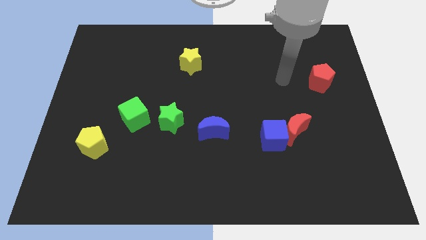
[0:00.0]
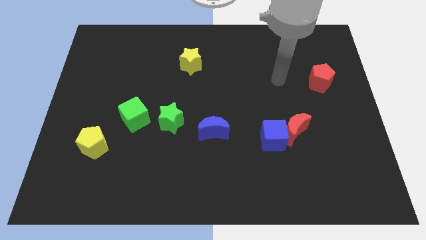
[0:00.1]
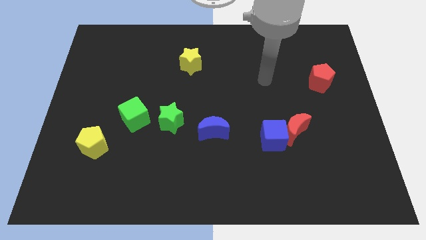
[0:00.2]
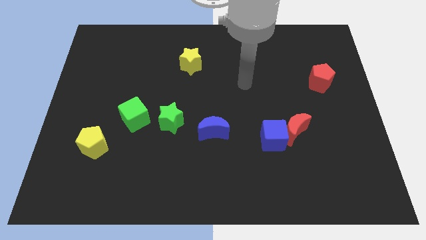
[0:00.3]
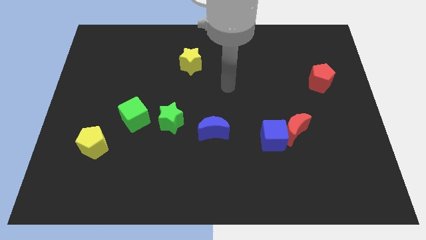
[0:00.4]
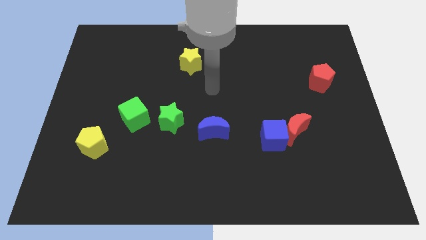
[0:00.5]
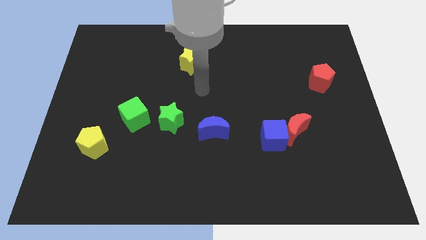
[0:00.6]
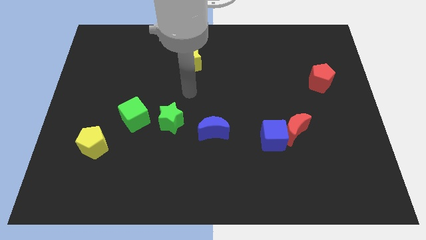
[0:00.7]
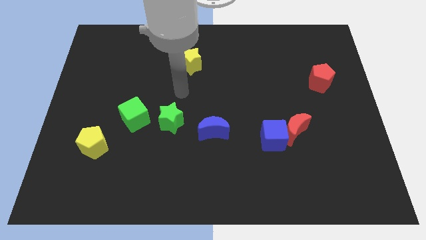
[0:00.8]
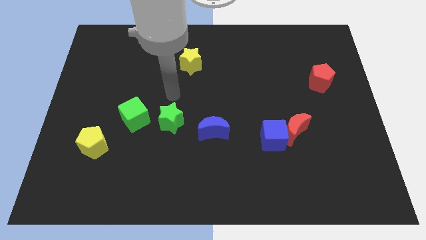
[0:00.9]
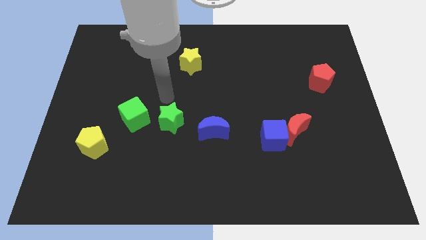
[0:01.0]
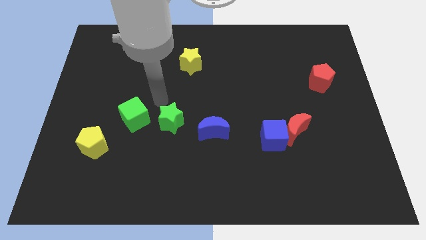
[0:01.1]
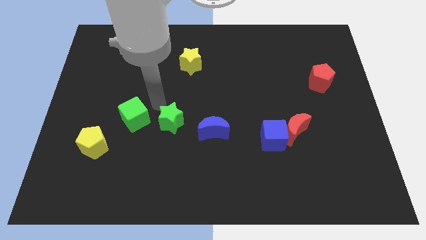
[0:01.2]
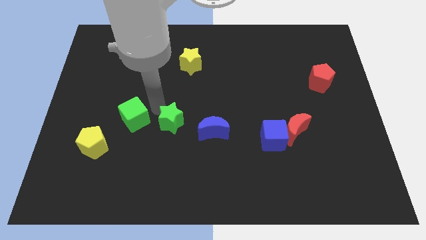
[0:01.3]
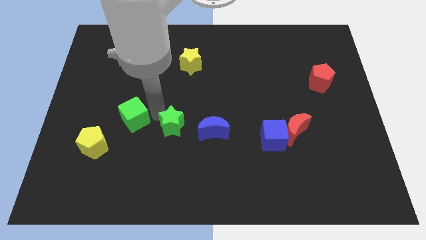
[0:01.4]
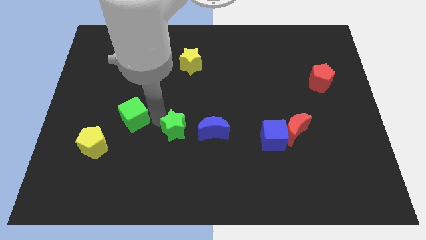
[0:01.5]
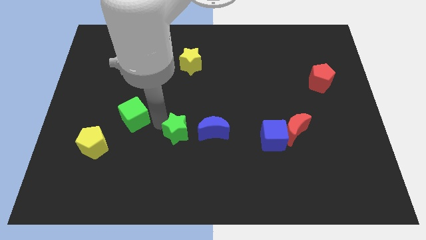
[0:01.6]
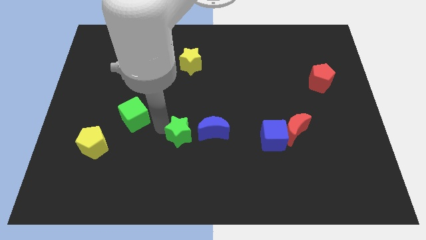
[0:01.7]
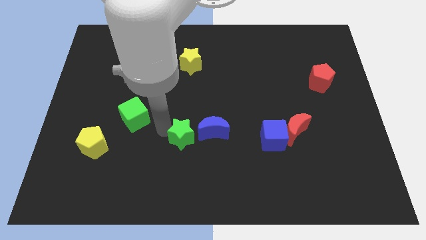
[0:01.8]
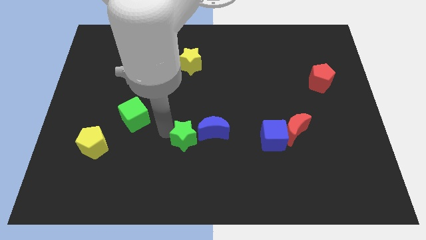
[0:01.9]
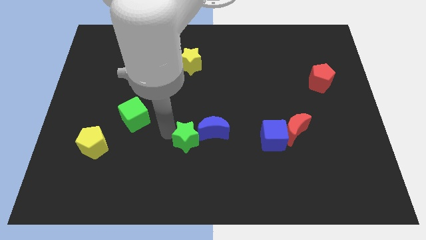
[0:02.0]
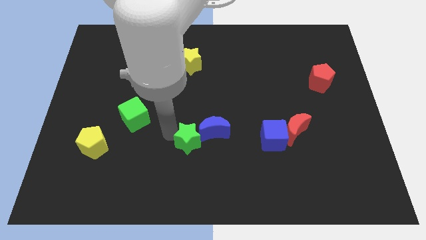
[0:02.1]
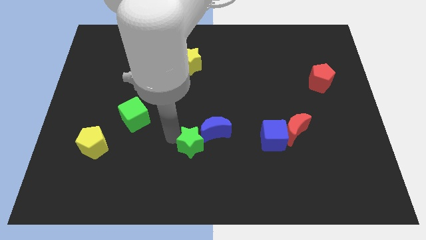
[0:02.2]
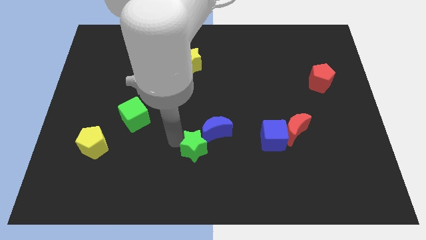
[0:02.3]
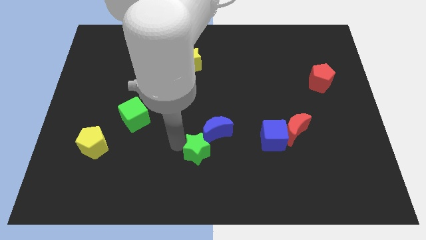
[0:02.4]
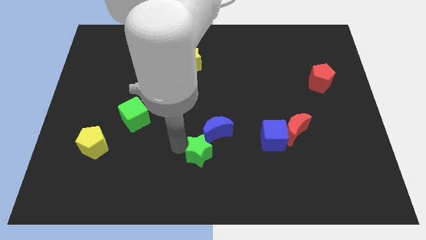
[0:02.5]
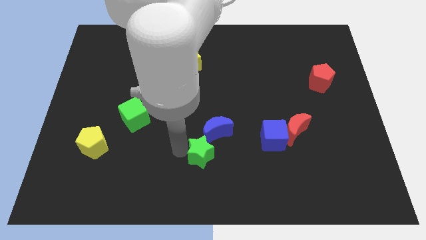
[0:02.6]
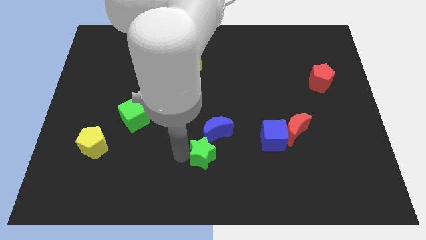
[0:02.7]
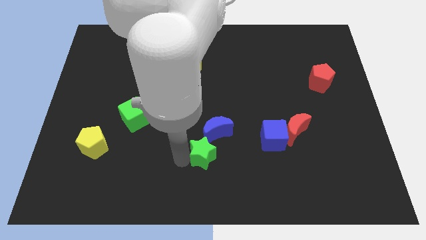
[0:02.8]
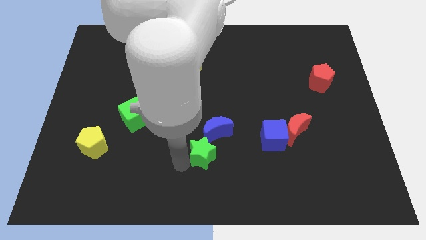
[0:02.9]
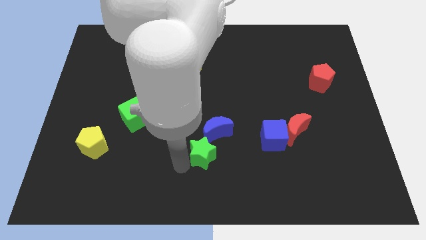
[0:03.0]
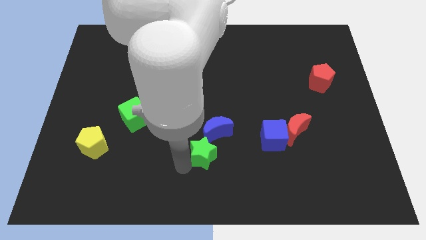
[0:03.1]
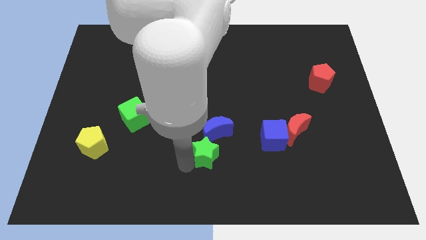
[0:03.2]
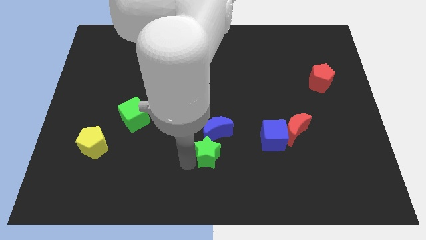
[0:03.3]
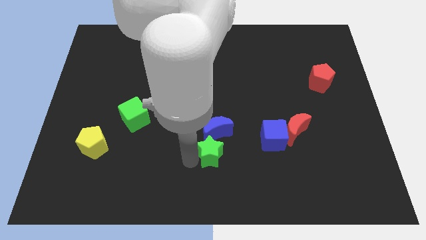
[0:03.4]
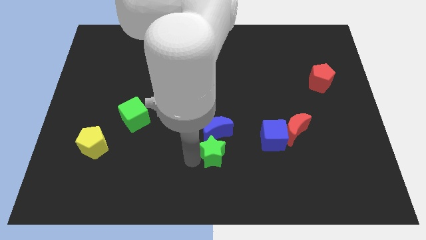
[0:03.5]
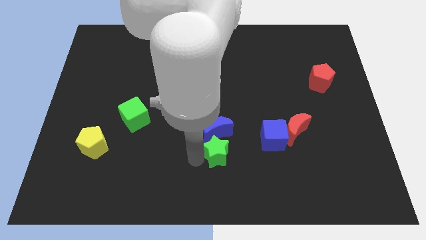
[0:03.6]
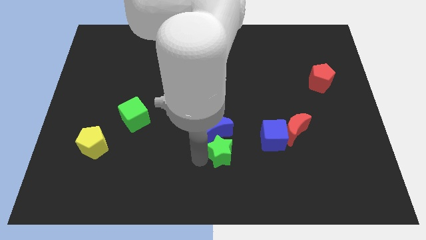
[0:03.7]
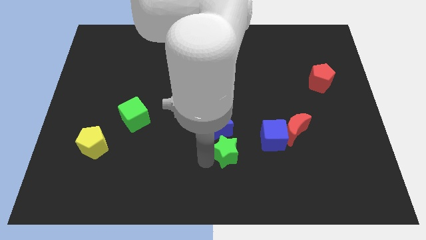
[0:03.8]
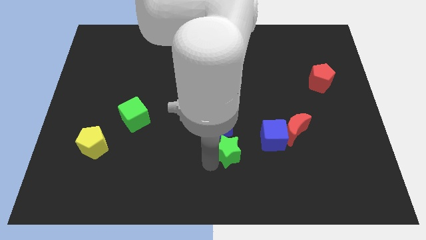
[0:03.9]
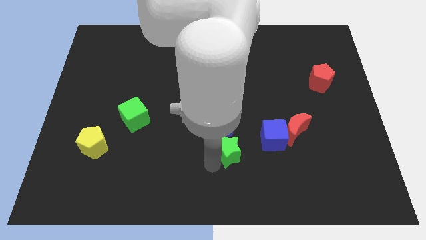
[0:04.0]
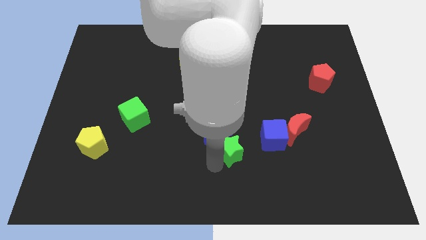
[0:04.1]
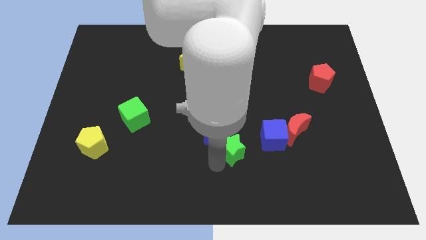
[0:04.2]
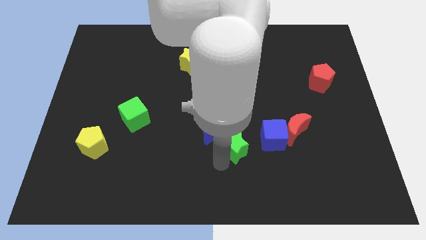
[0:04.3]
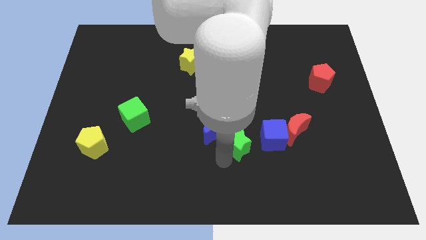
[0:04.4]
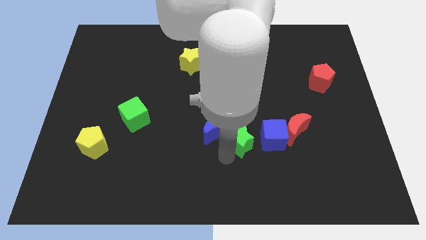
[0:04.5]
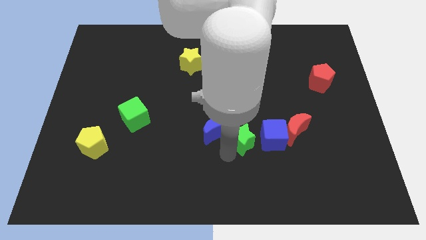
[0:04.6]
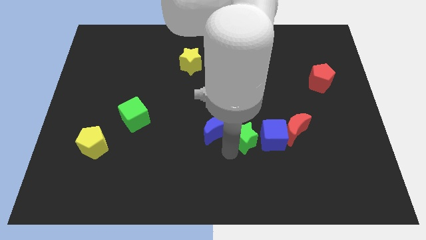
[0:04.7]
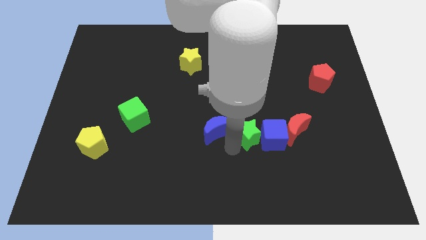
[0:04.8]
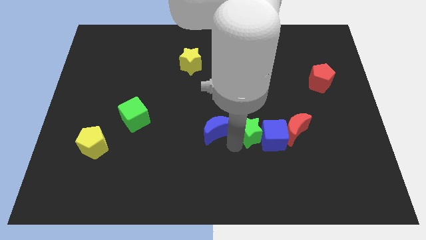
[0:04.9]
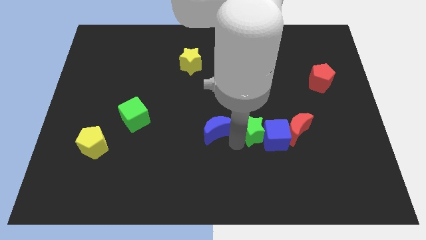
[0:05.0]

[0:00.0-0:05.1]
slide the green star to the blue cube

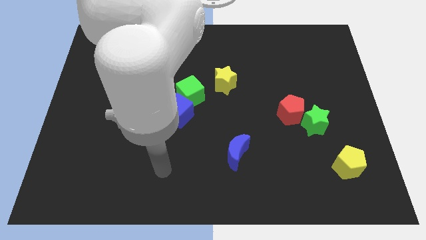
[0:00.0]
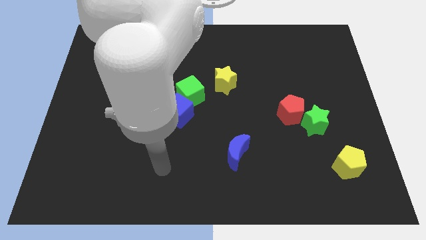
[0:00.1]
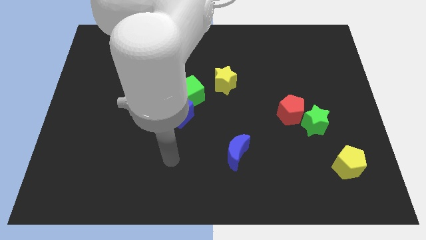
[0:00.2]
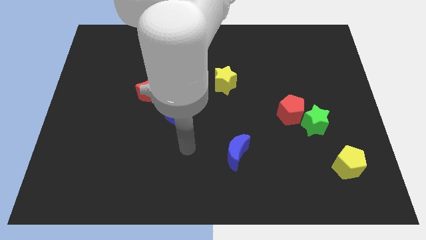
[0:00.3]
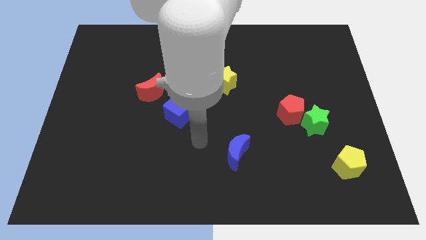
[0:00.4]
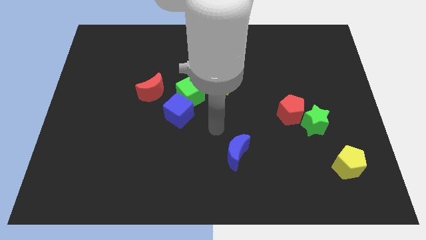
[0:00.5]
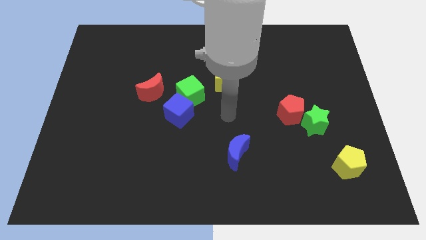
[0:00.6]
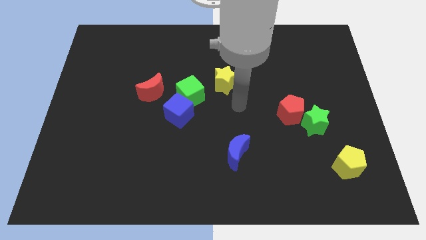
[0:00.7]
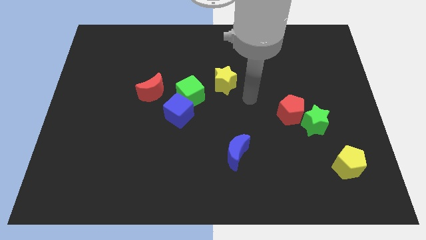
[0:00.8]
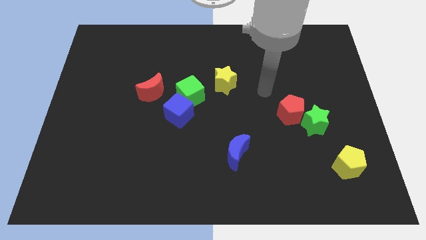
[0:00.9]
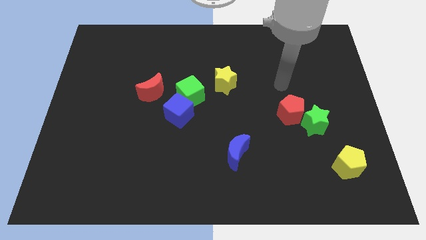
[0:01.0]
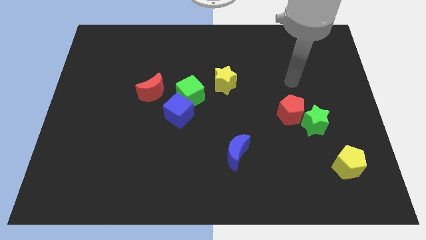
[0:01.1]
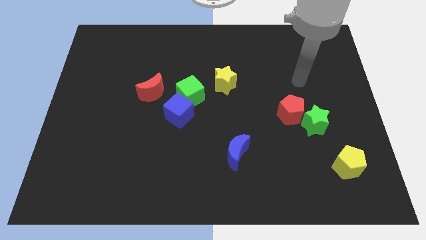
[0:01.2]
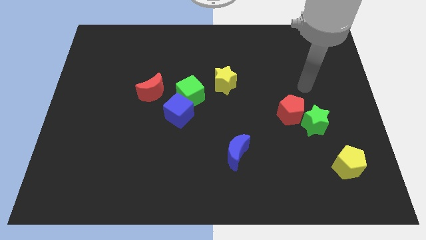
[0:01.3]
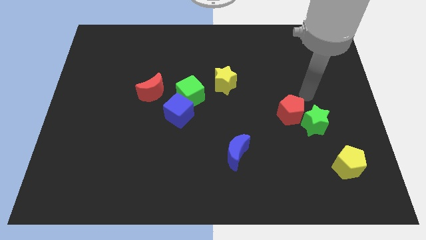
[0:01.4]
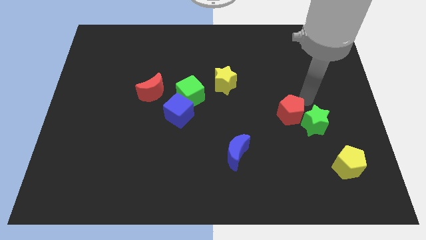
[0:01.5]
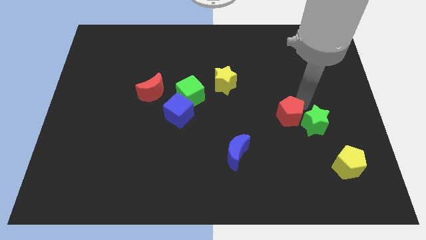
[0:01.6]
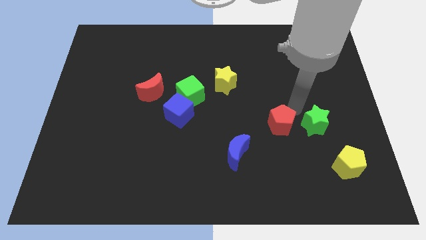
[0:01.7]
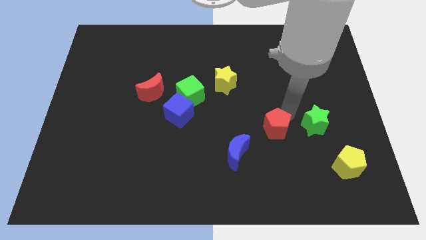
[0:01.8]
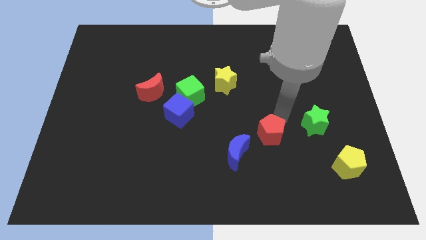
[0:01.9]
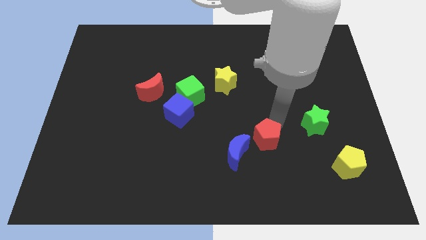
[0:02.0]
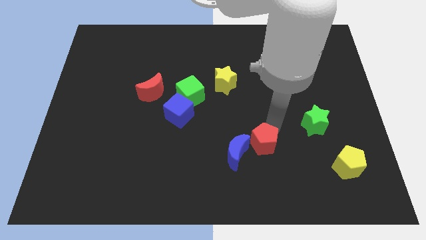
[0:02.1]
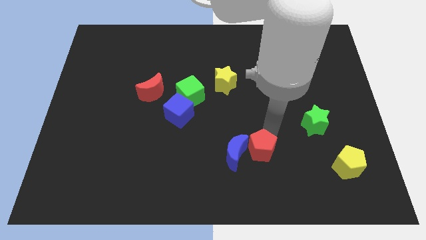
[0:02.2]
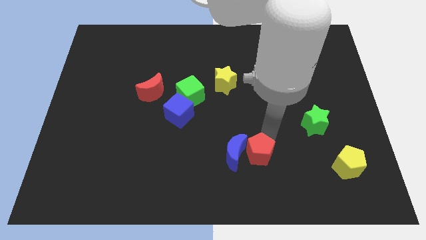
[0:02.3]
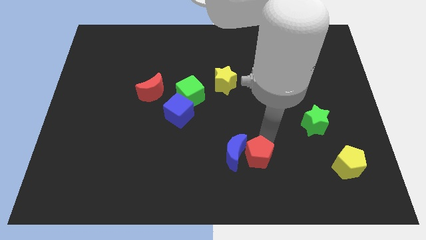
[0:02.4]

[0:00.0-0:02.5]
put the red pentagon close to the blue moon

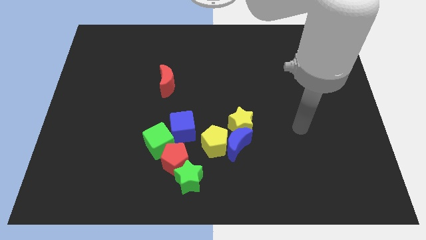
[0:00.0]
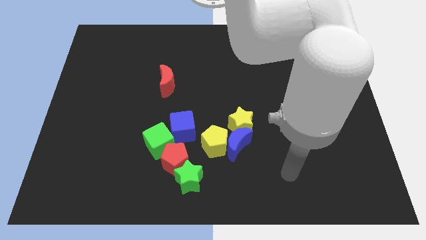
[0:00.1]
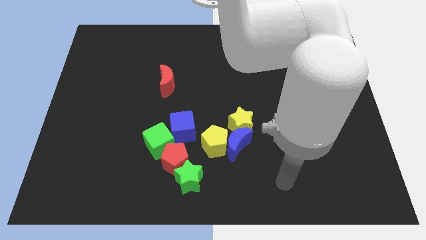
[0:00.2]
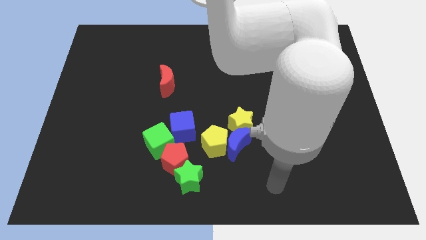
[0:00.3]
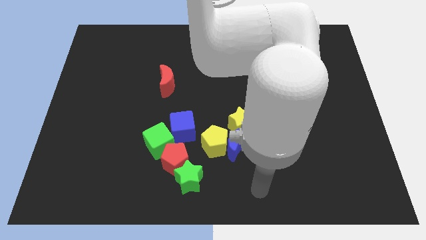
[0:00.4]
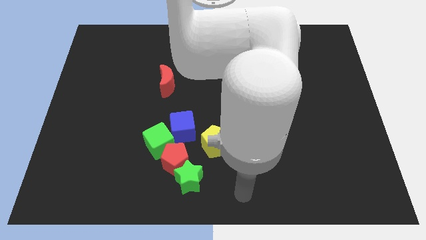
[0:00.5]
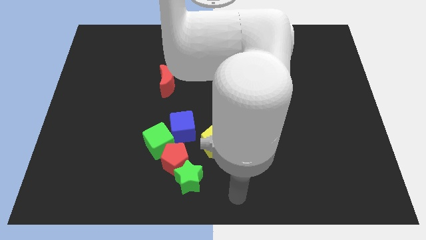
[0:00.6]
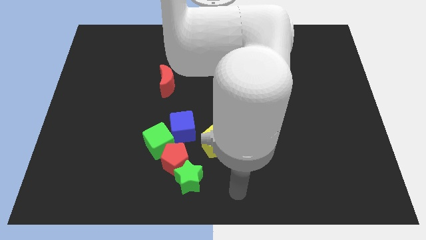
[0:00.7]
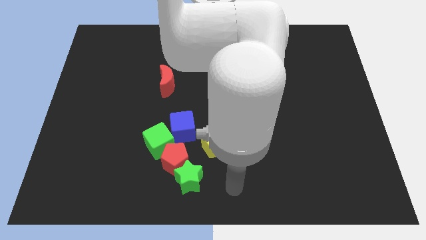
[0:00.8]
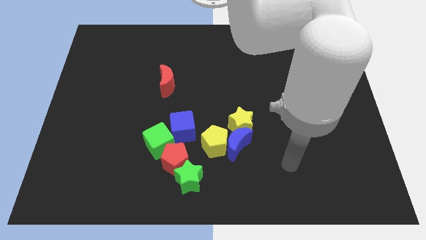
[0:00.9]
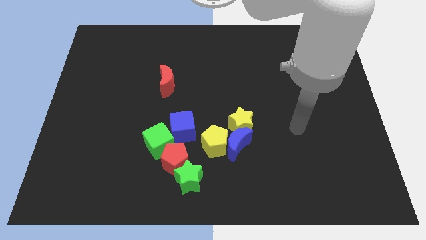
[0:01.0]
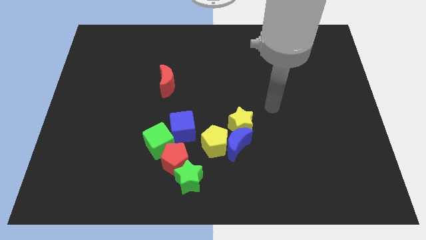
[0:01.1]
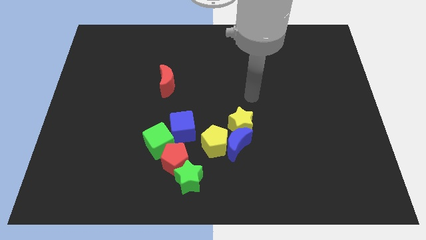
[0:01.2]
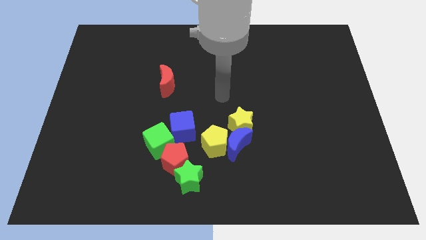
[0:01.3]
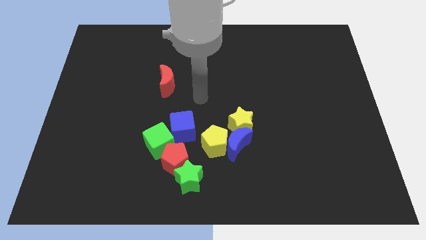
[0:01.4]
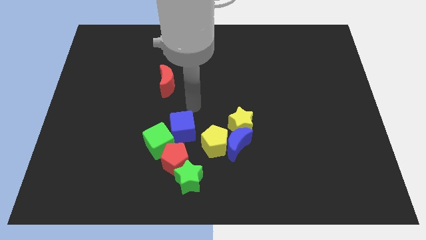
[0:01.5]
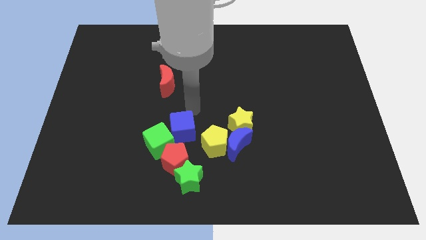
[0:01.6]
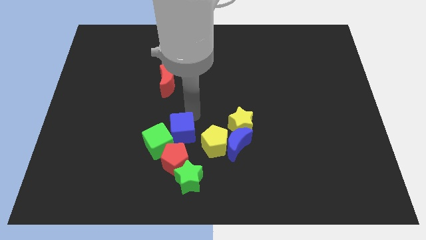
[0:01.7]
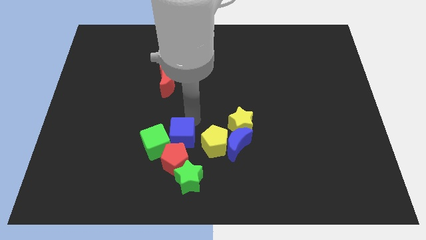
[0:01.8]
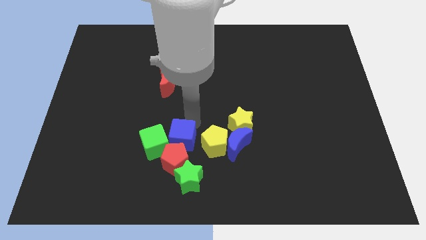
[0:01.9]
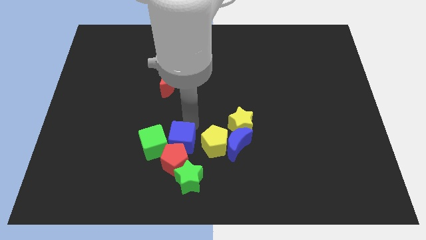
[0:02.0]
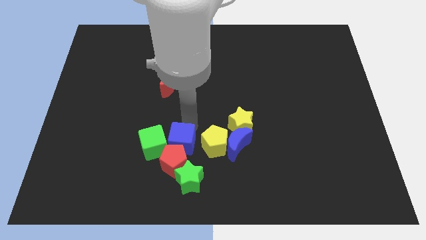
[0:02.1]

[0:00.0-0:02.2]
push the blue cube towards the red pentagon
